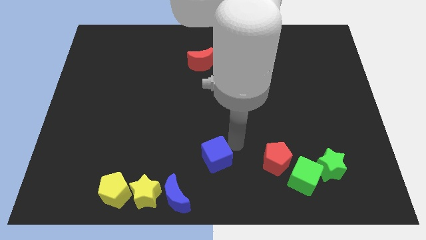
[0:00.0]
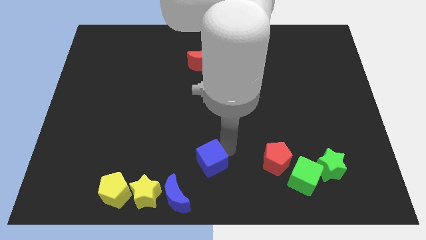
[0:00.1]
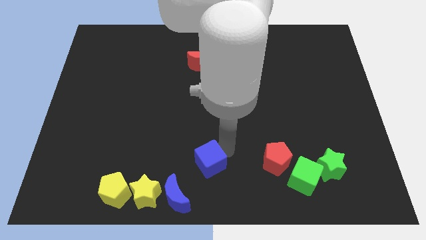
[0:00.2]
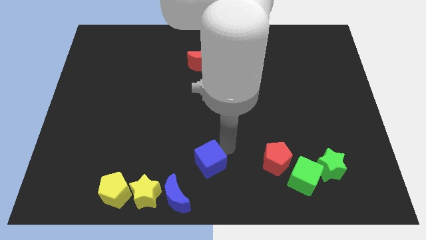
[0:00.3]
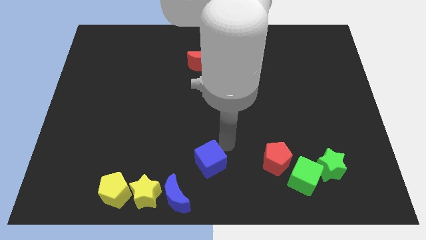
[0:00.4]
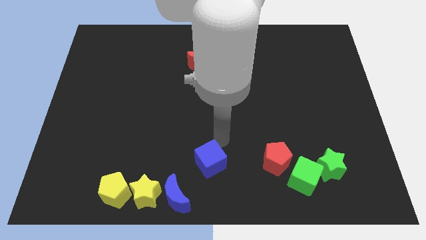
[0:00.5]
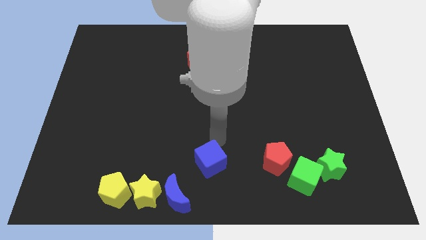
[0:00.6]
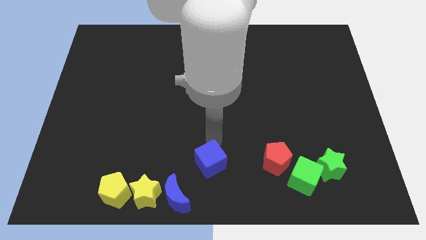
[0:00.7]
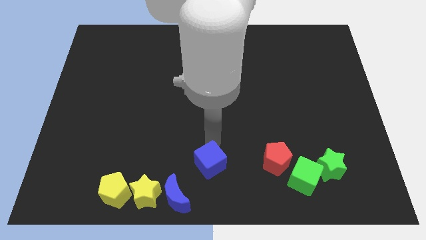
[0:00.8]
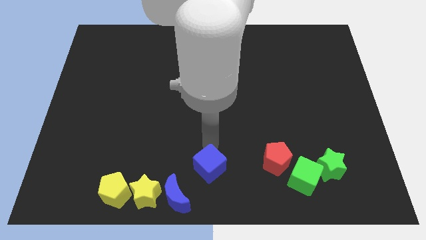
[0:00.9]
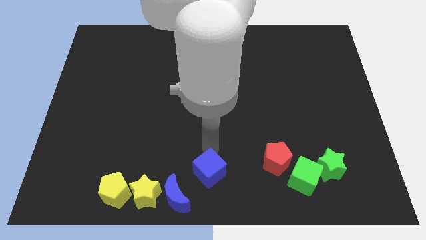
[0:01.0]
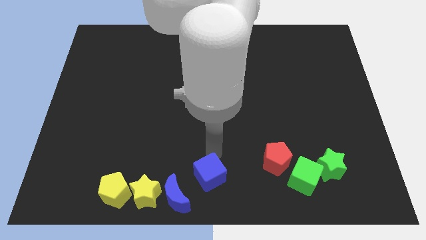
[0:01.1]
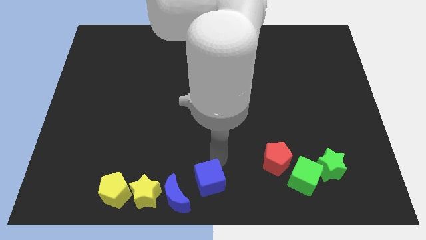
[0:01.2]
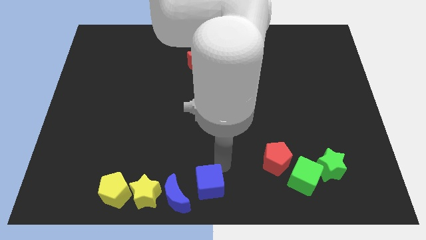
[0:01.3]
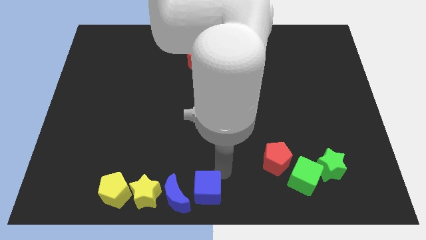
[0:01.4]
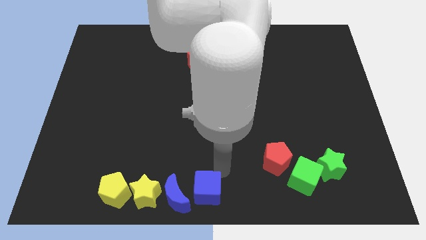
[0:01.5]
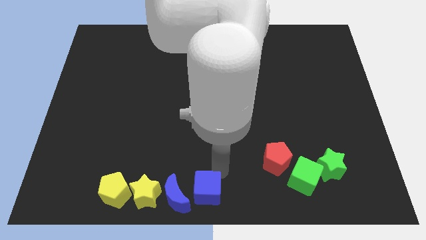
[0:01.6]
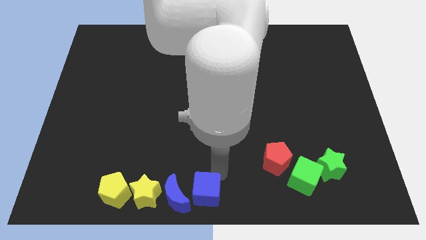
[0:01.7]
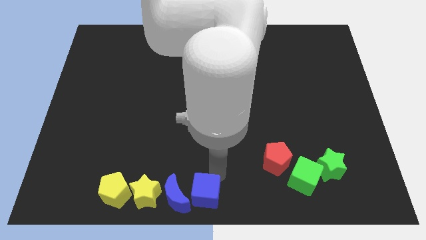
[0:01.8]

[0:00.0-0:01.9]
place the blue cube right to the blue moon

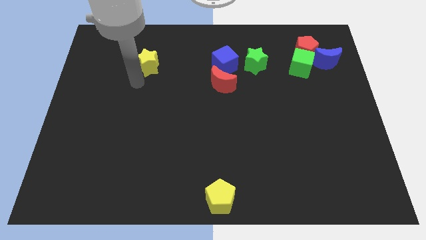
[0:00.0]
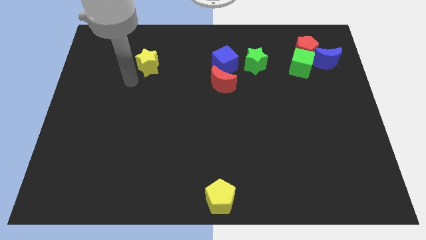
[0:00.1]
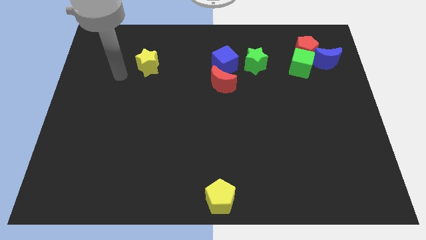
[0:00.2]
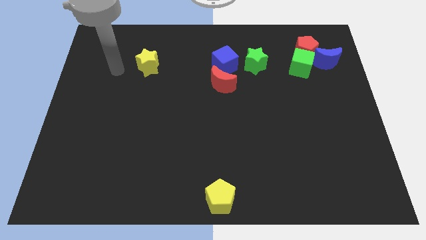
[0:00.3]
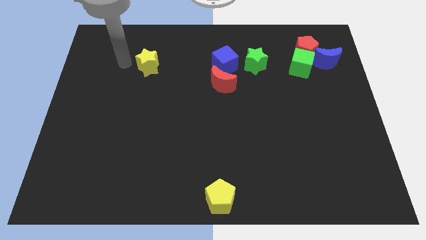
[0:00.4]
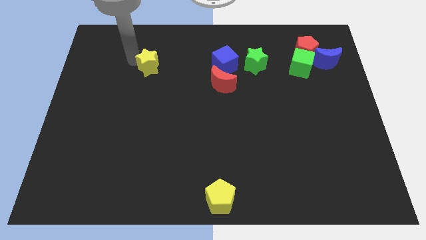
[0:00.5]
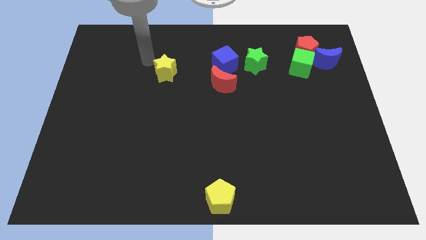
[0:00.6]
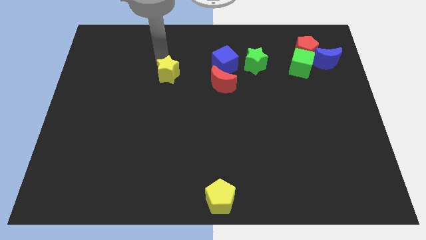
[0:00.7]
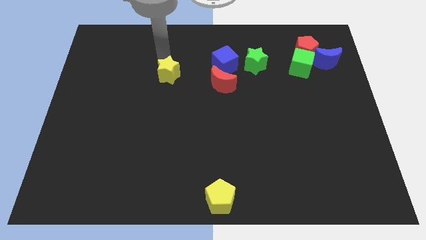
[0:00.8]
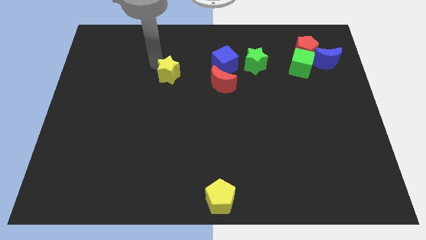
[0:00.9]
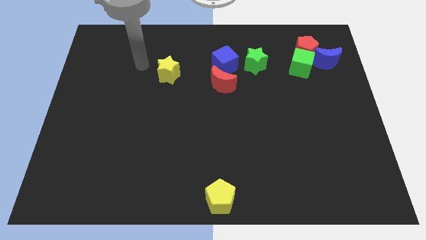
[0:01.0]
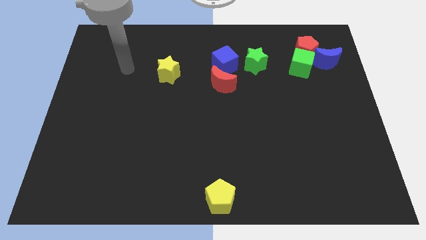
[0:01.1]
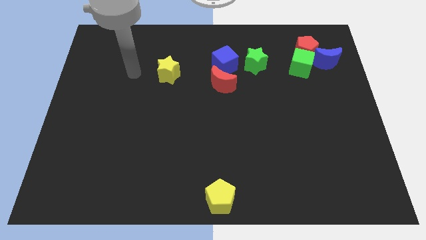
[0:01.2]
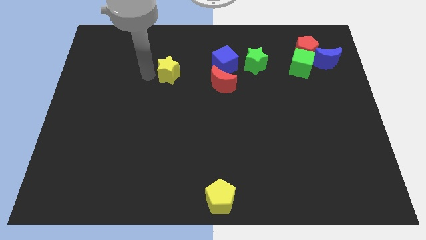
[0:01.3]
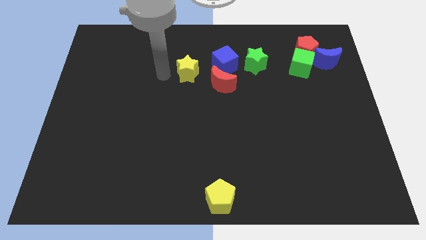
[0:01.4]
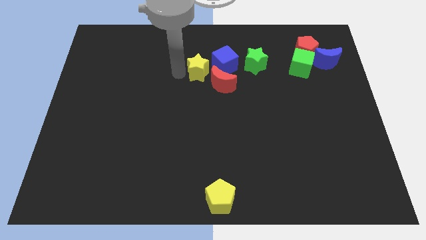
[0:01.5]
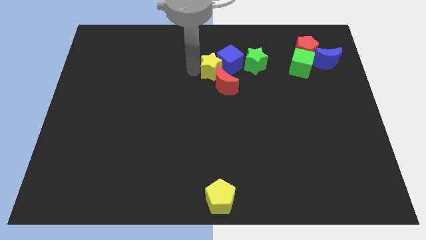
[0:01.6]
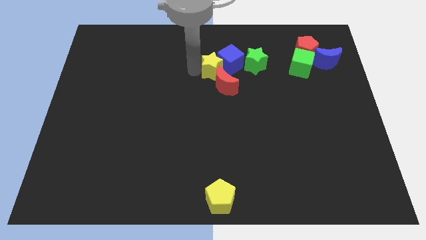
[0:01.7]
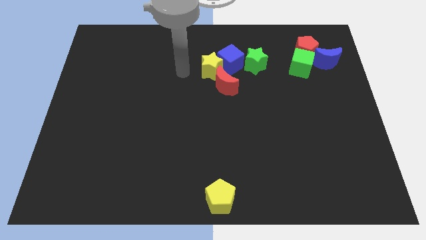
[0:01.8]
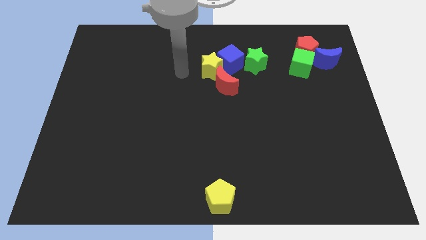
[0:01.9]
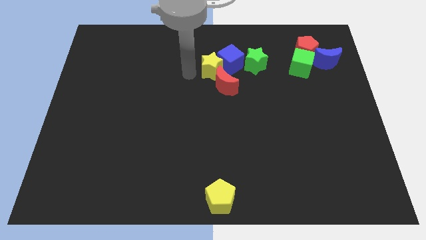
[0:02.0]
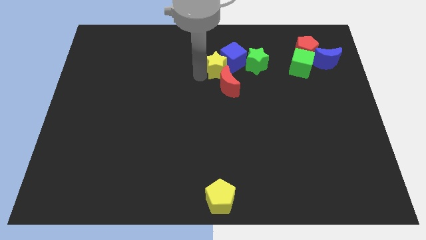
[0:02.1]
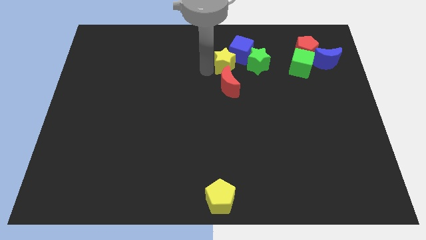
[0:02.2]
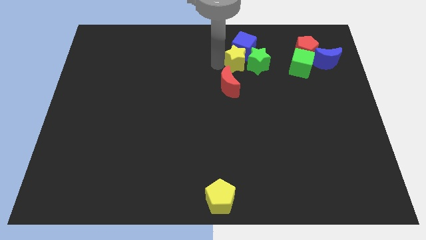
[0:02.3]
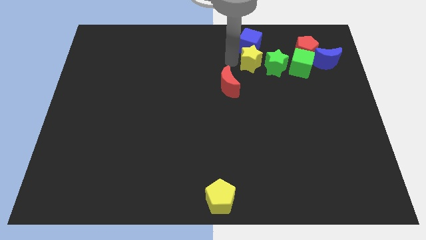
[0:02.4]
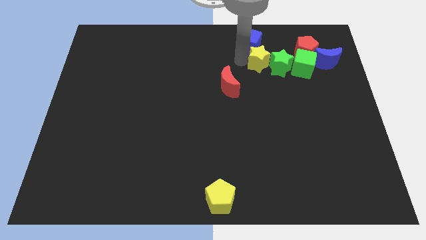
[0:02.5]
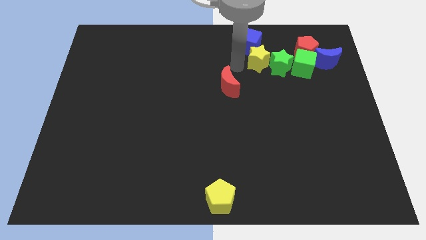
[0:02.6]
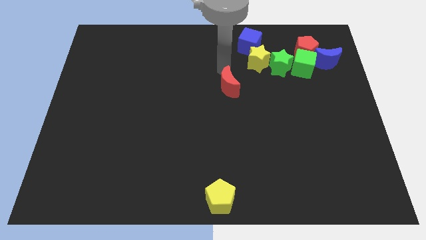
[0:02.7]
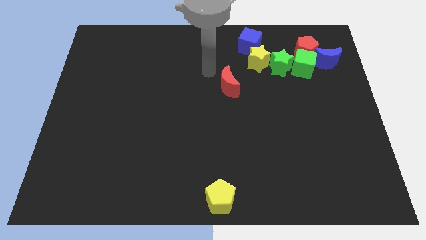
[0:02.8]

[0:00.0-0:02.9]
push the yellow star into green star

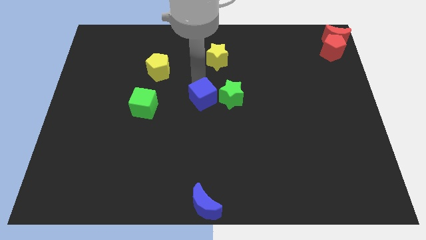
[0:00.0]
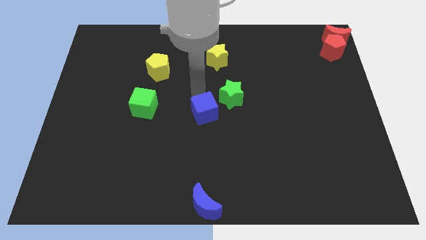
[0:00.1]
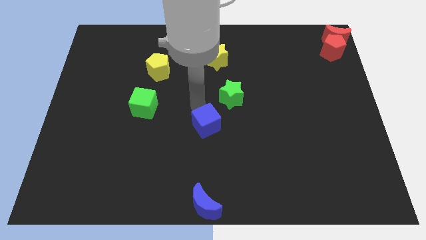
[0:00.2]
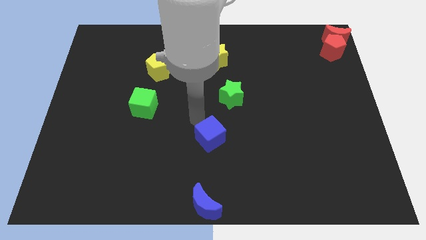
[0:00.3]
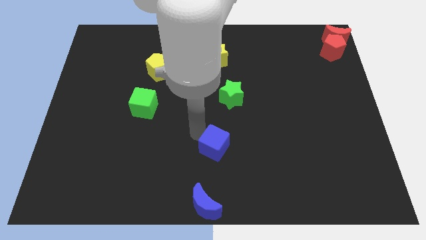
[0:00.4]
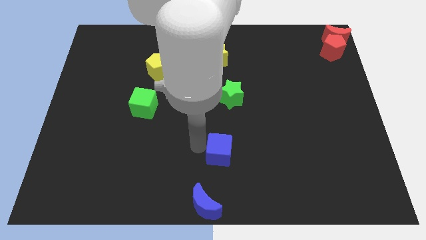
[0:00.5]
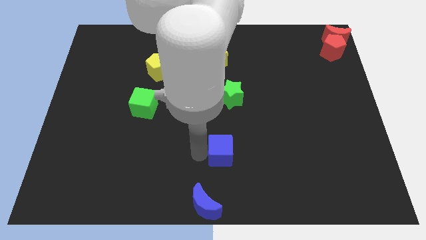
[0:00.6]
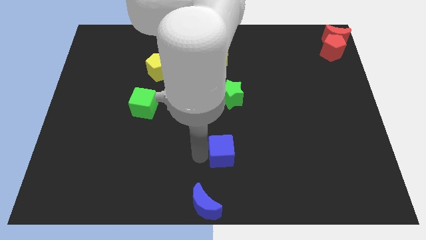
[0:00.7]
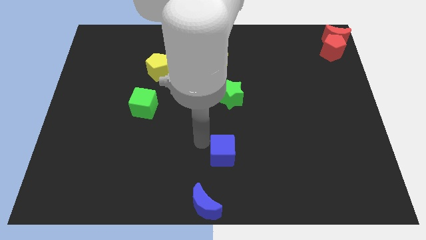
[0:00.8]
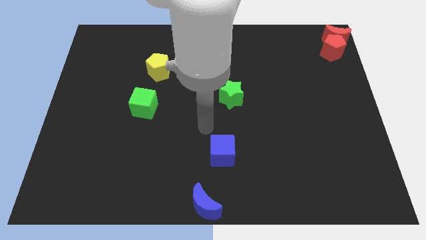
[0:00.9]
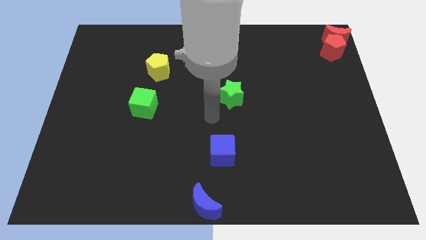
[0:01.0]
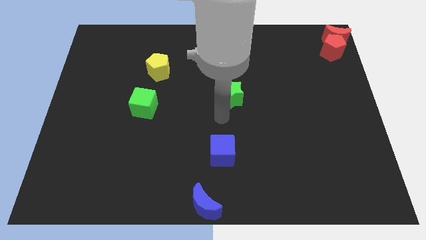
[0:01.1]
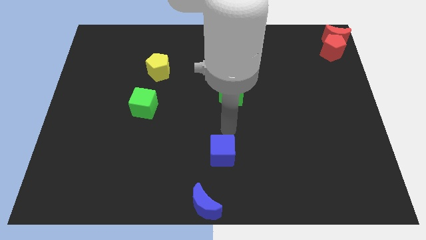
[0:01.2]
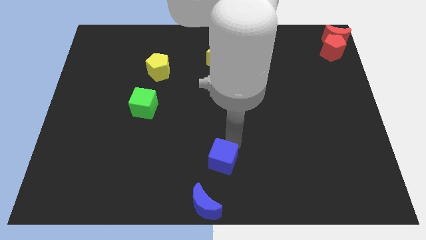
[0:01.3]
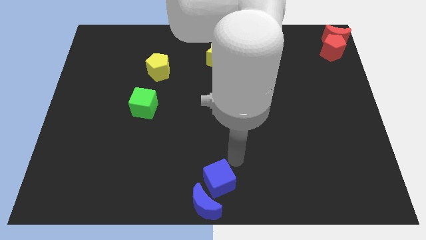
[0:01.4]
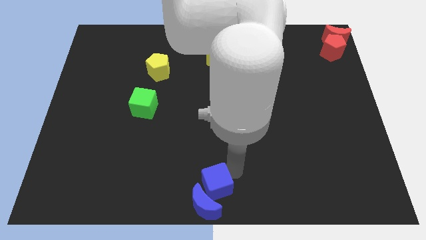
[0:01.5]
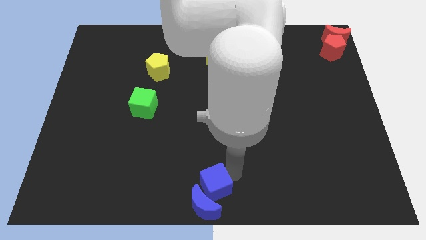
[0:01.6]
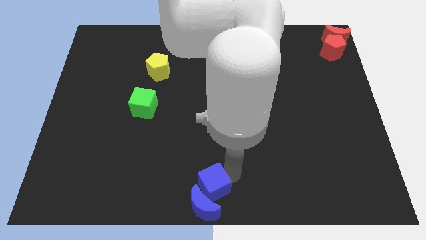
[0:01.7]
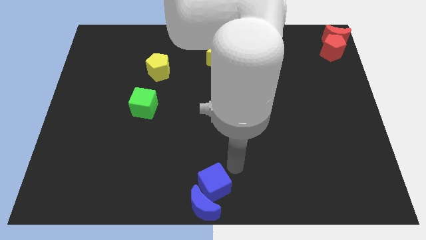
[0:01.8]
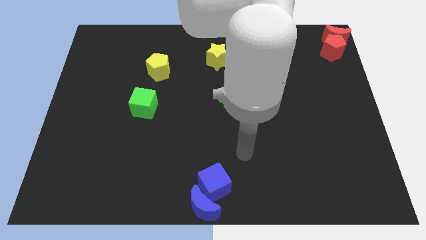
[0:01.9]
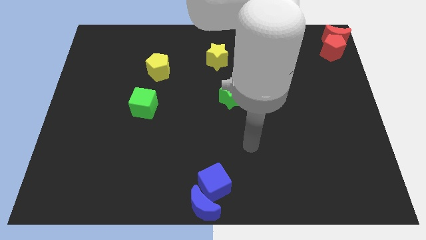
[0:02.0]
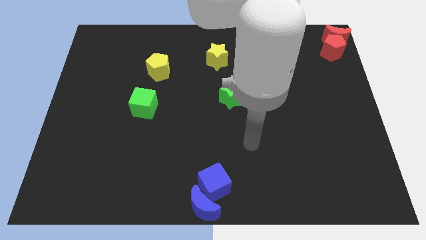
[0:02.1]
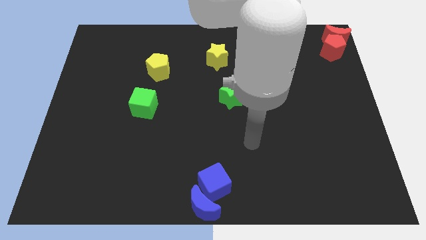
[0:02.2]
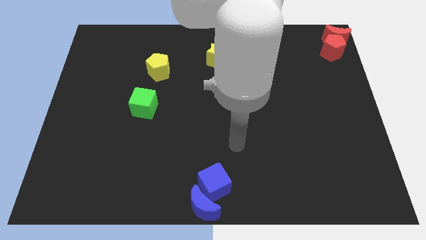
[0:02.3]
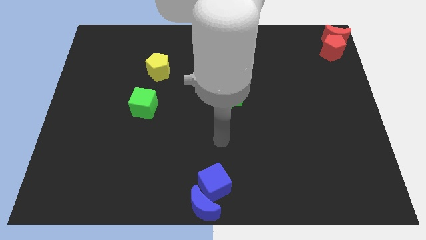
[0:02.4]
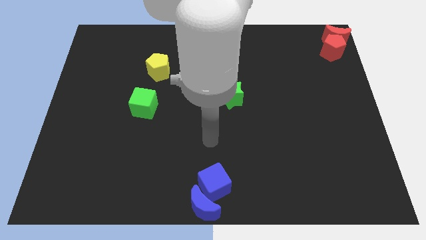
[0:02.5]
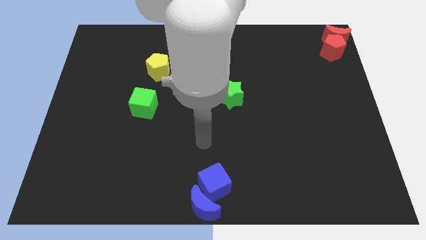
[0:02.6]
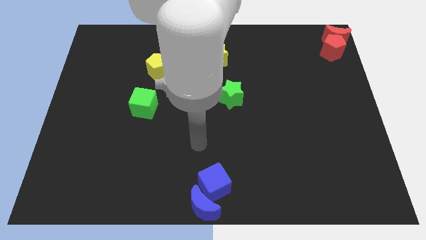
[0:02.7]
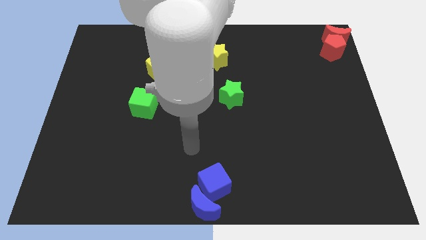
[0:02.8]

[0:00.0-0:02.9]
place the blue cube above the blue moon

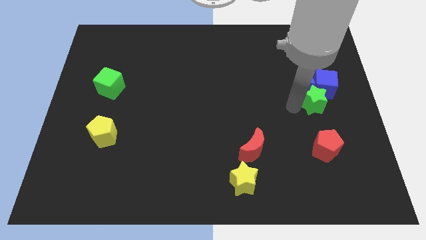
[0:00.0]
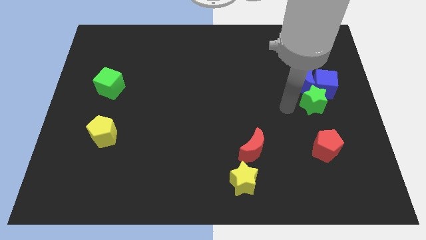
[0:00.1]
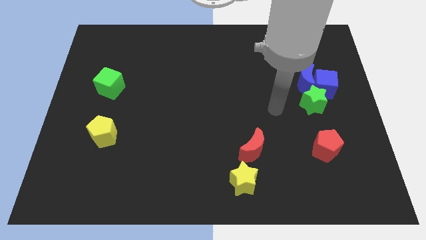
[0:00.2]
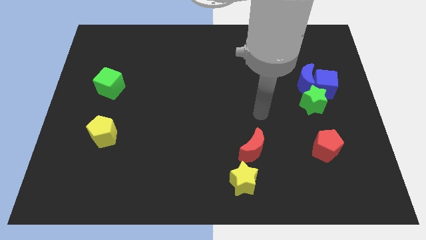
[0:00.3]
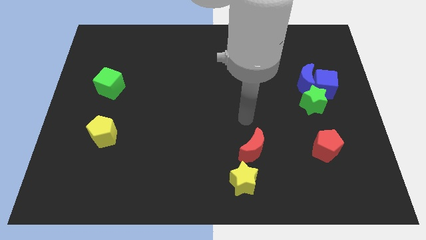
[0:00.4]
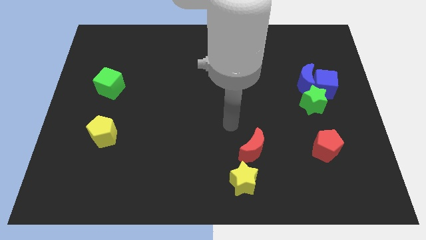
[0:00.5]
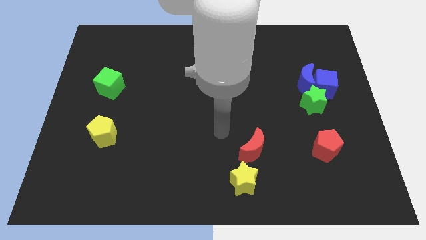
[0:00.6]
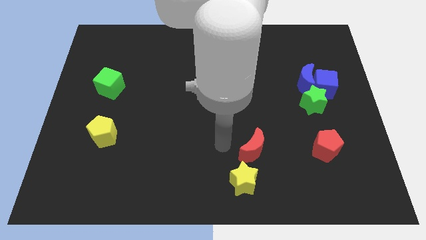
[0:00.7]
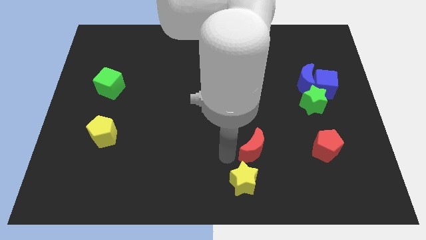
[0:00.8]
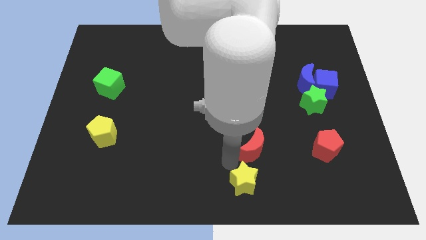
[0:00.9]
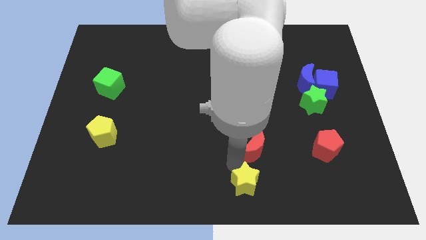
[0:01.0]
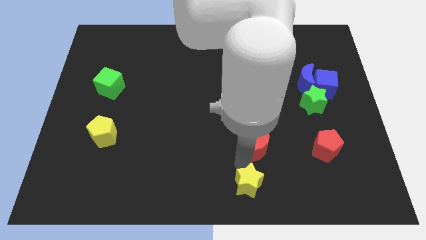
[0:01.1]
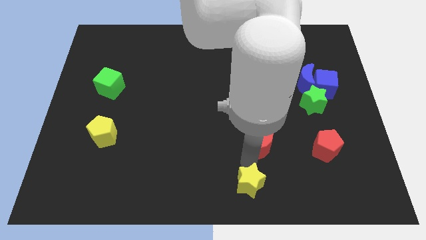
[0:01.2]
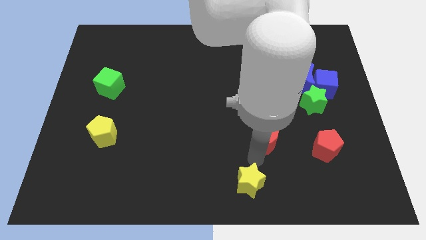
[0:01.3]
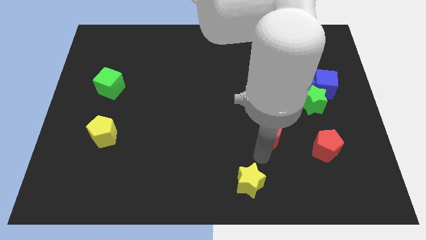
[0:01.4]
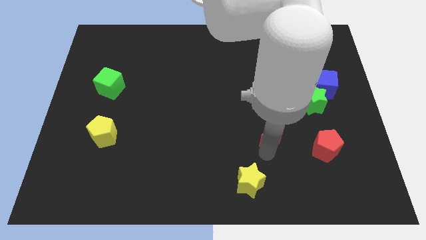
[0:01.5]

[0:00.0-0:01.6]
separate the red crescent from the yellow star
